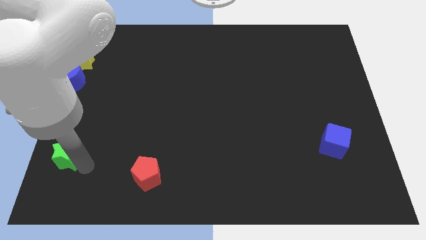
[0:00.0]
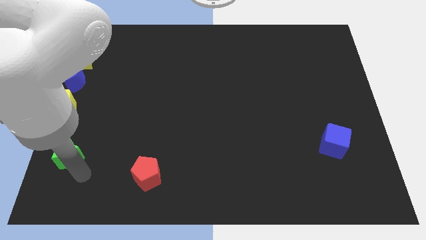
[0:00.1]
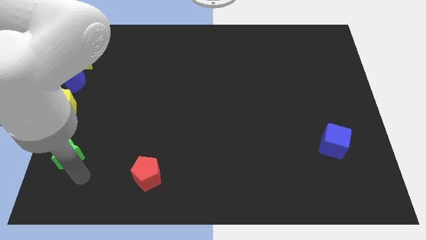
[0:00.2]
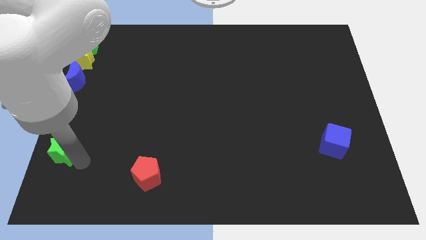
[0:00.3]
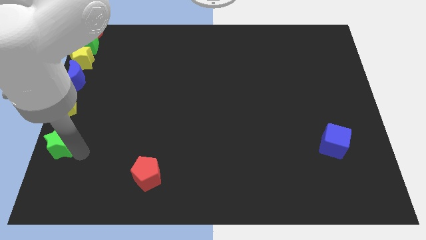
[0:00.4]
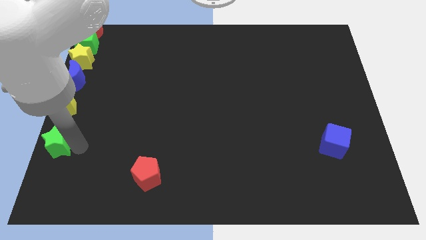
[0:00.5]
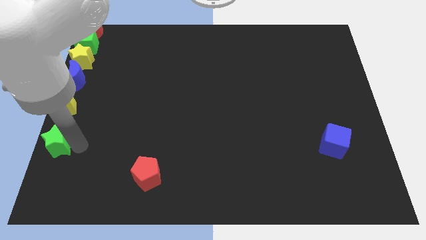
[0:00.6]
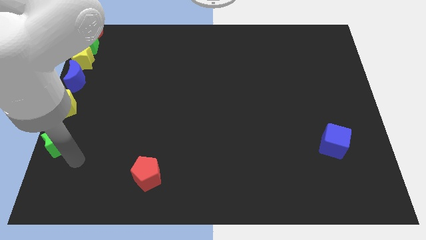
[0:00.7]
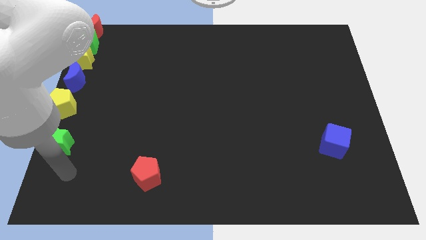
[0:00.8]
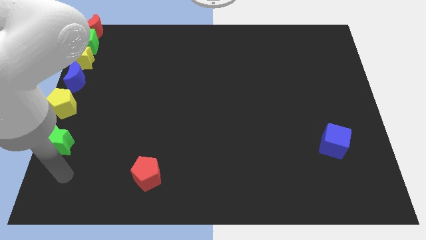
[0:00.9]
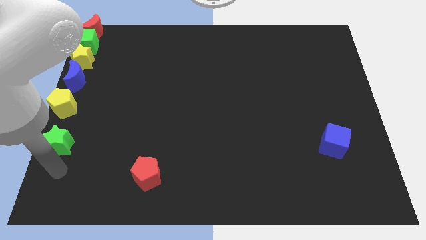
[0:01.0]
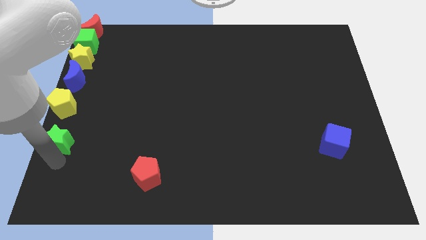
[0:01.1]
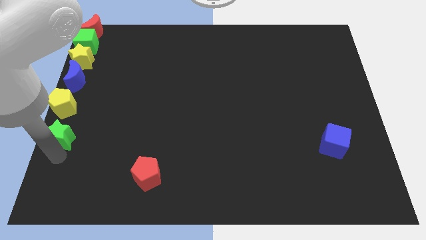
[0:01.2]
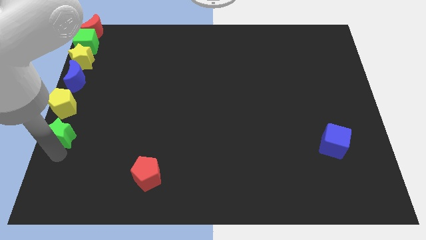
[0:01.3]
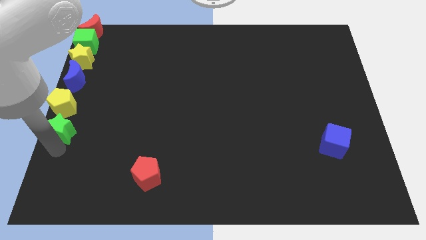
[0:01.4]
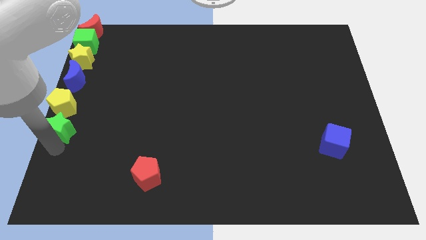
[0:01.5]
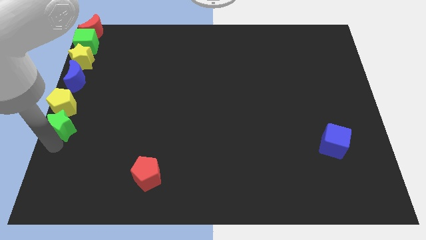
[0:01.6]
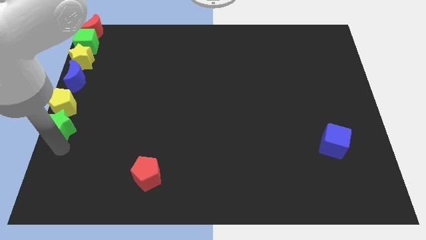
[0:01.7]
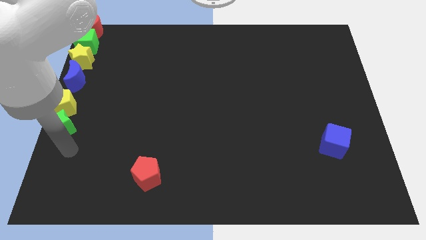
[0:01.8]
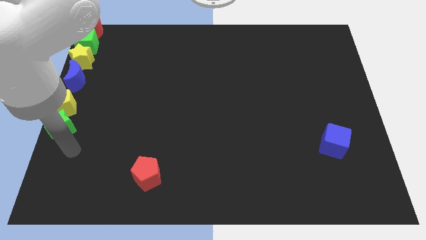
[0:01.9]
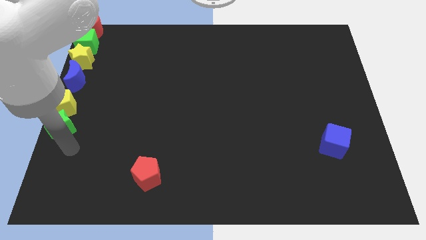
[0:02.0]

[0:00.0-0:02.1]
adjust the green star at the bottom of the yellow pentagon

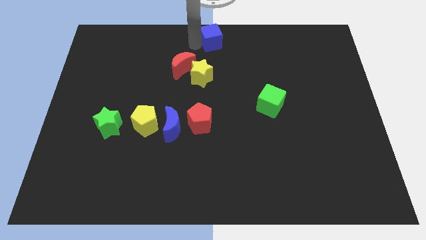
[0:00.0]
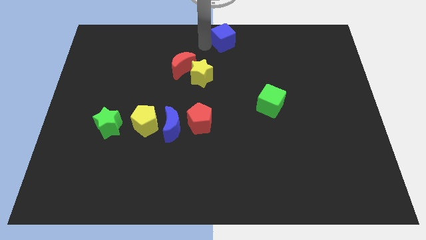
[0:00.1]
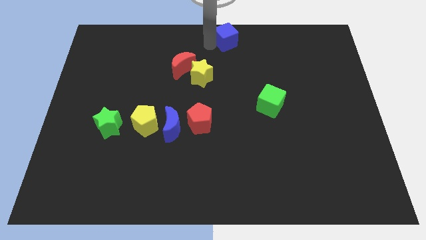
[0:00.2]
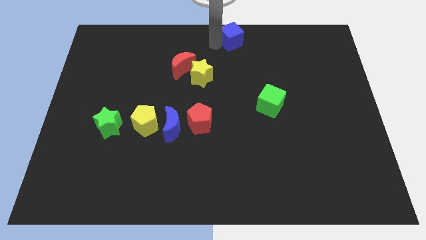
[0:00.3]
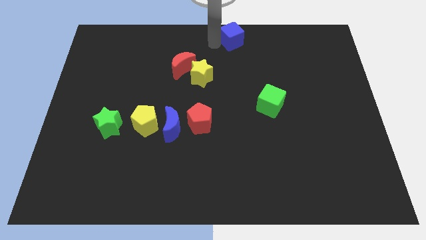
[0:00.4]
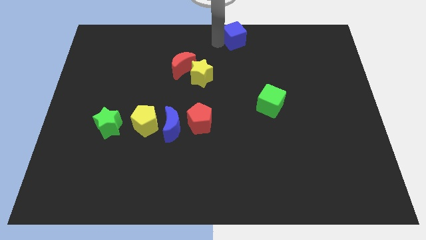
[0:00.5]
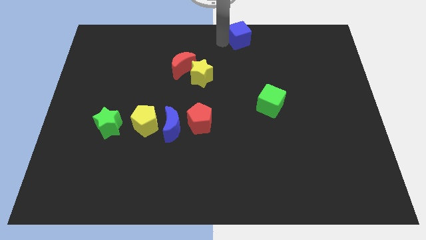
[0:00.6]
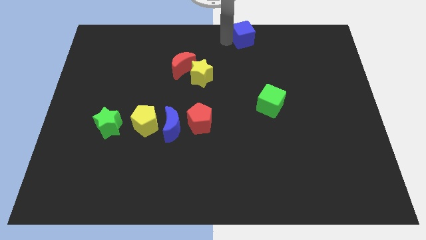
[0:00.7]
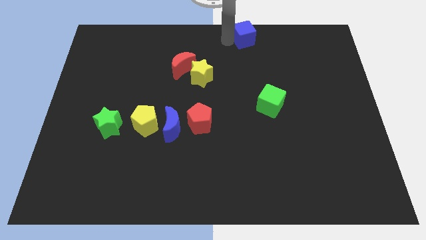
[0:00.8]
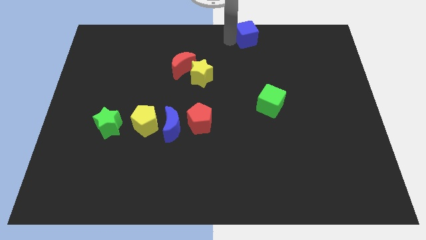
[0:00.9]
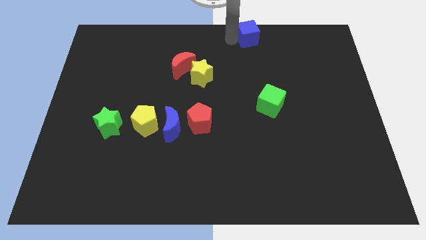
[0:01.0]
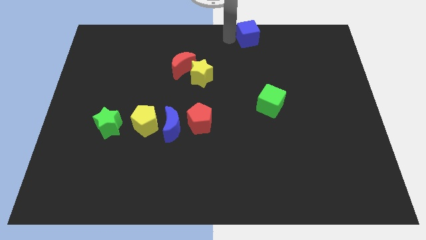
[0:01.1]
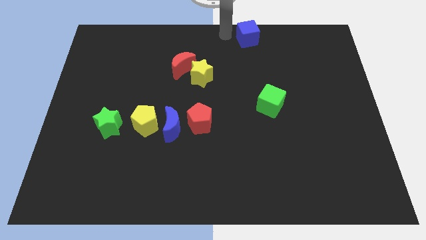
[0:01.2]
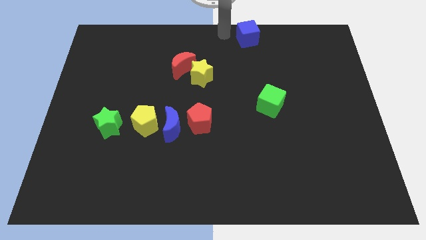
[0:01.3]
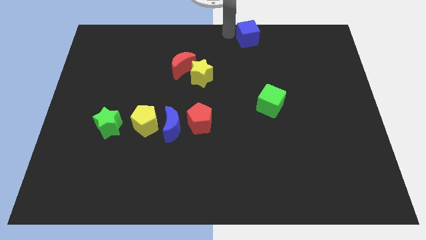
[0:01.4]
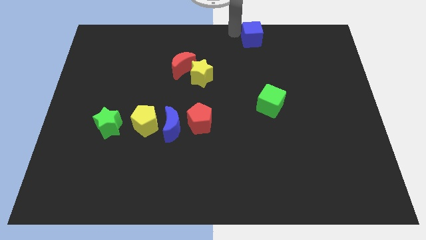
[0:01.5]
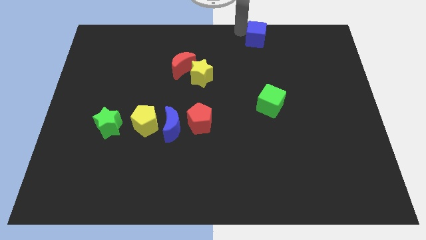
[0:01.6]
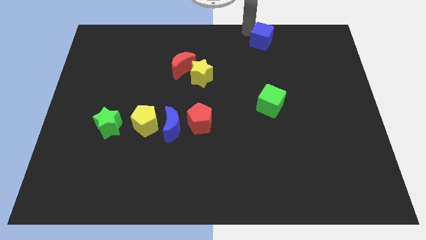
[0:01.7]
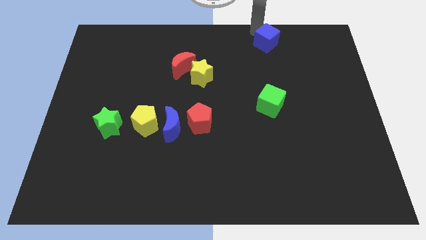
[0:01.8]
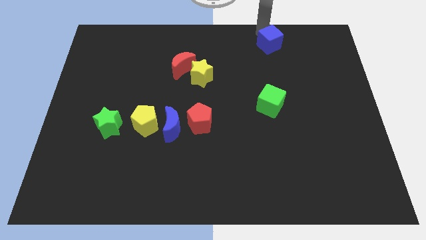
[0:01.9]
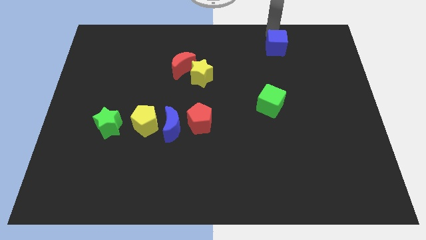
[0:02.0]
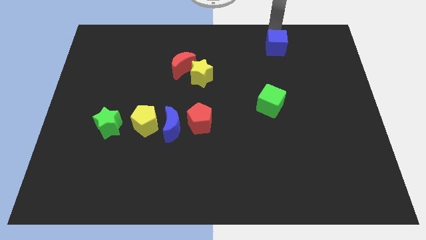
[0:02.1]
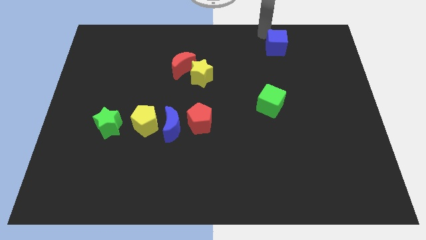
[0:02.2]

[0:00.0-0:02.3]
push the blue cube towards the right side of the board

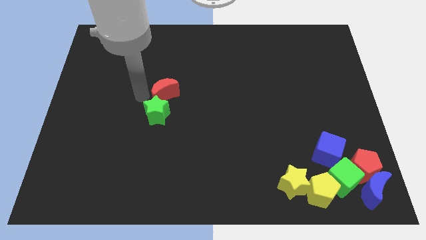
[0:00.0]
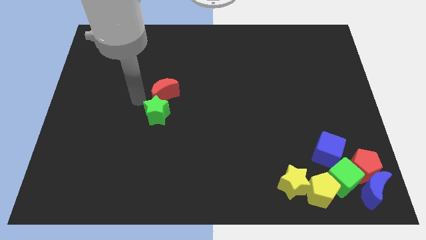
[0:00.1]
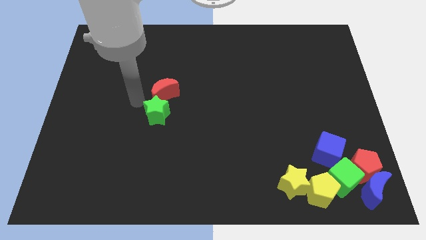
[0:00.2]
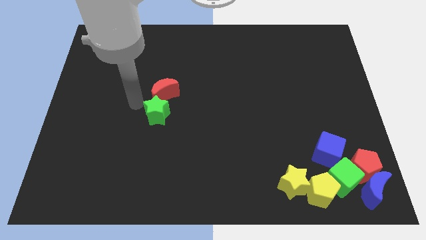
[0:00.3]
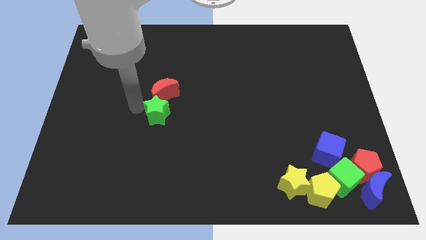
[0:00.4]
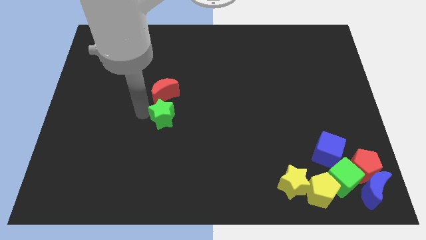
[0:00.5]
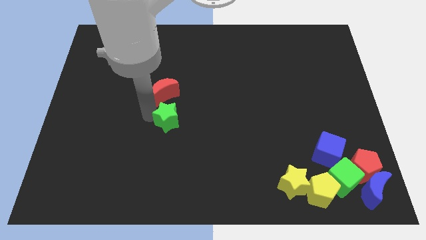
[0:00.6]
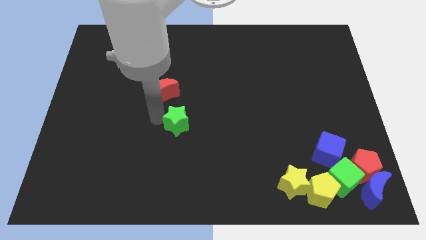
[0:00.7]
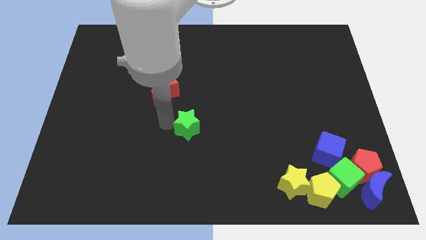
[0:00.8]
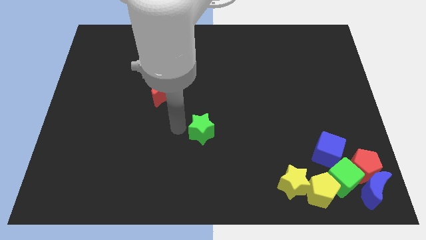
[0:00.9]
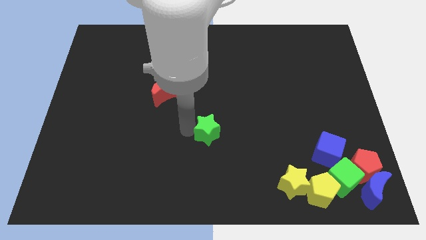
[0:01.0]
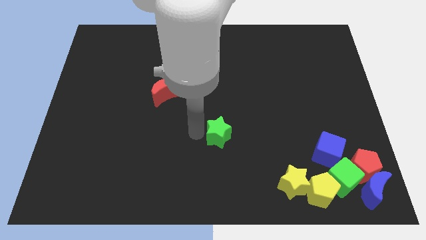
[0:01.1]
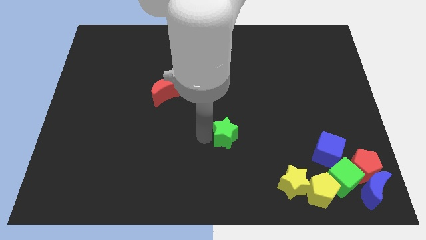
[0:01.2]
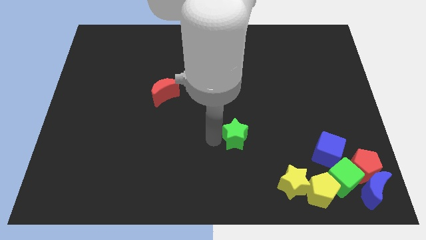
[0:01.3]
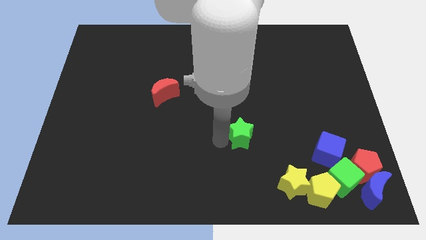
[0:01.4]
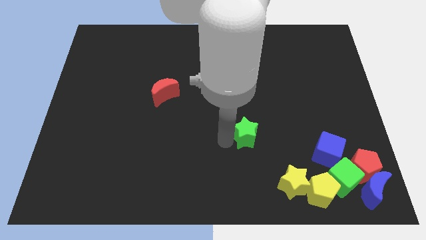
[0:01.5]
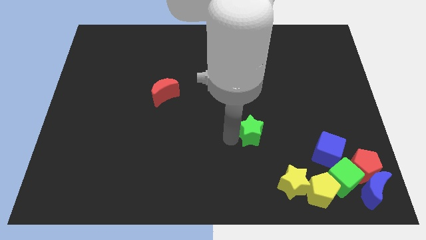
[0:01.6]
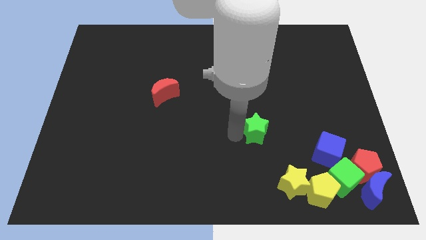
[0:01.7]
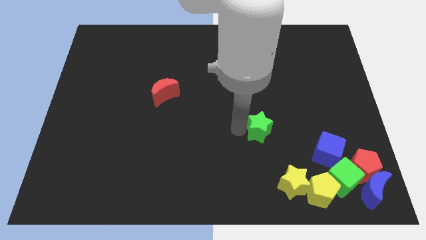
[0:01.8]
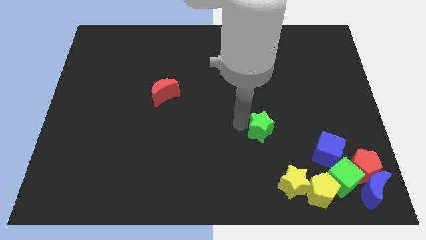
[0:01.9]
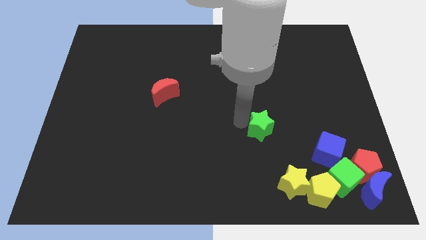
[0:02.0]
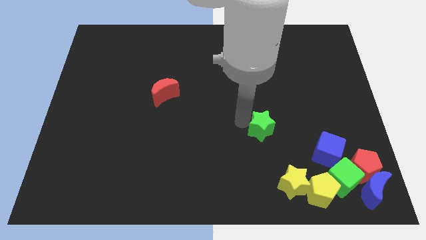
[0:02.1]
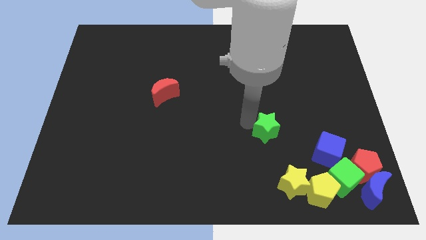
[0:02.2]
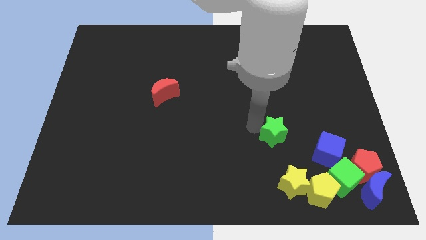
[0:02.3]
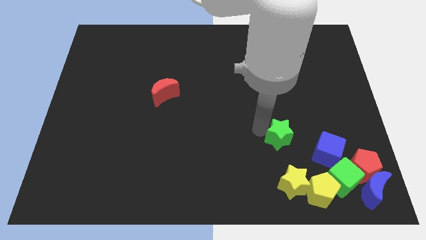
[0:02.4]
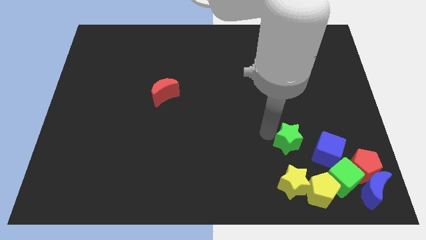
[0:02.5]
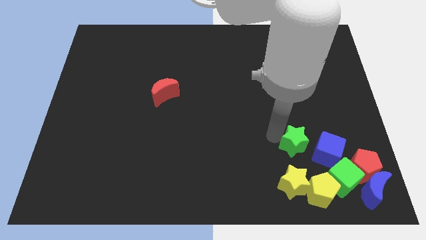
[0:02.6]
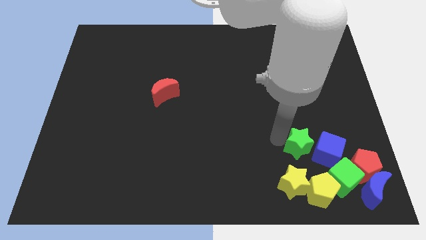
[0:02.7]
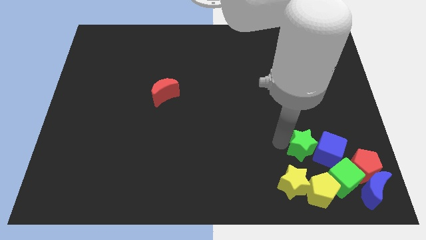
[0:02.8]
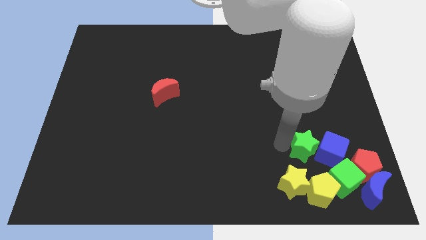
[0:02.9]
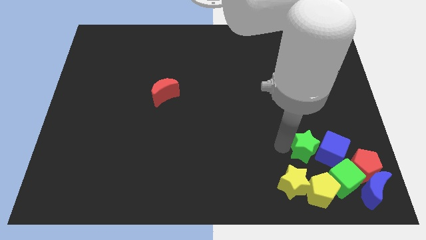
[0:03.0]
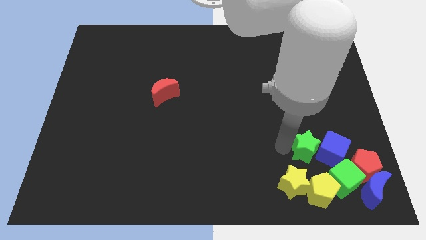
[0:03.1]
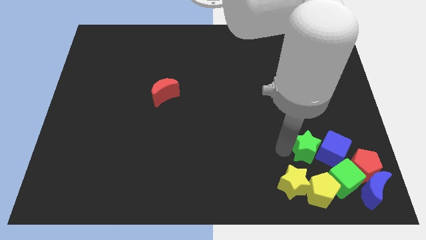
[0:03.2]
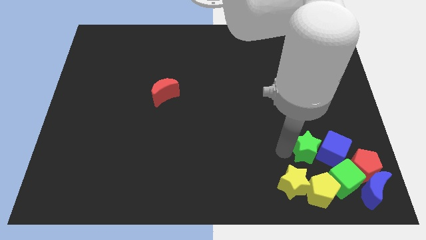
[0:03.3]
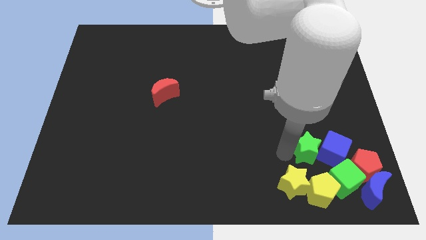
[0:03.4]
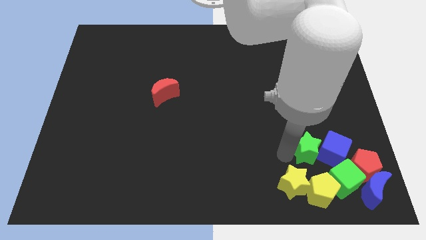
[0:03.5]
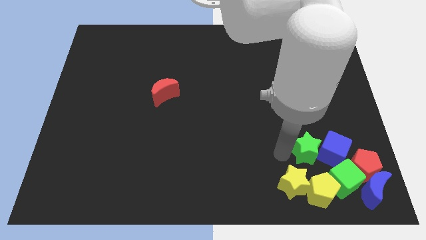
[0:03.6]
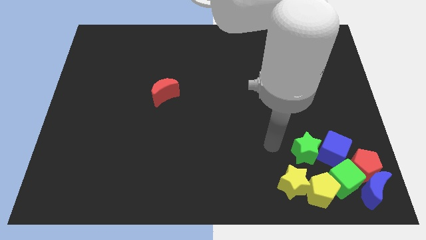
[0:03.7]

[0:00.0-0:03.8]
move green star to the left of blue cube

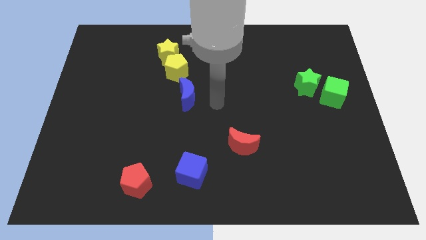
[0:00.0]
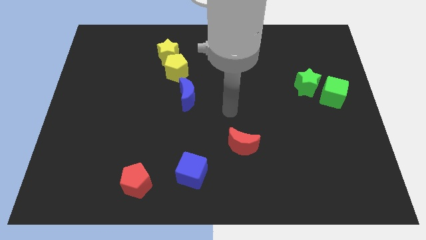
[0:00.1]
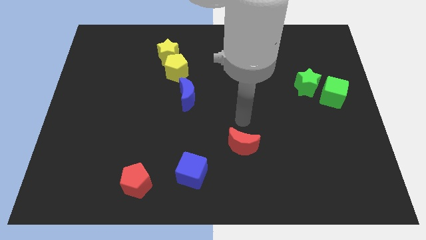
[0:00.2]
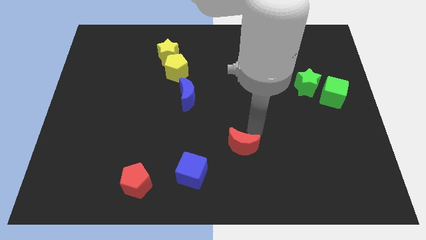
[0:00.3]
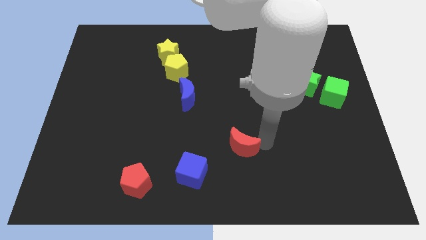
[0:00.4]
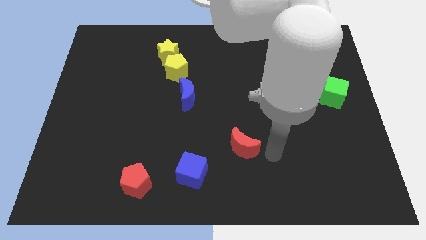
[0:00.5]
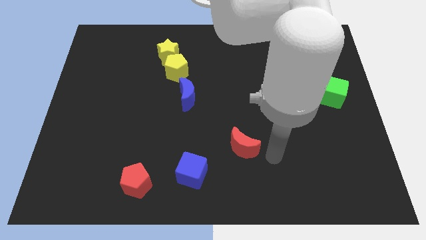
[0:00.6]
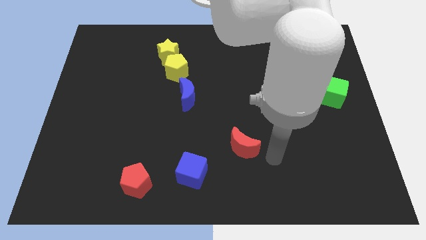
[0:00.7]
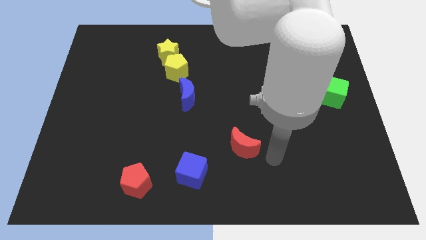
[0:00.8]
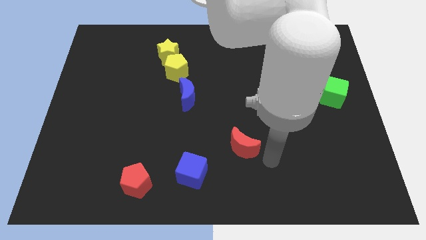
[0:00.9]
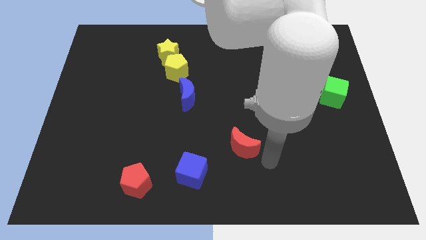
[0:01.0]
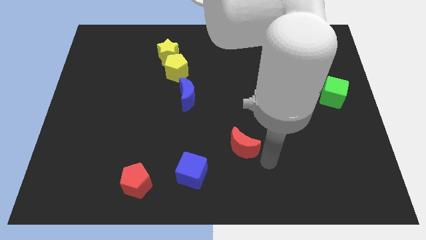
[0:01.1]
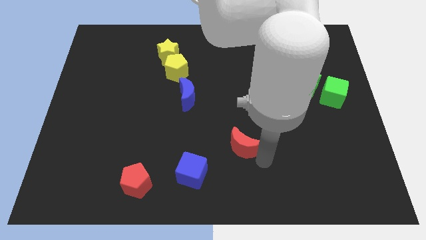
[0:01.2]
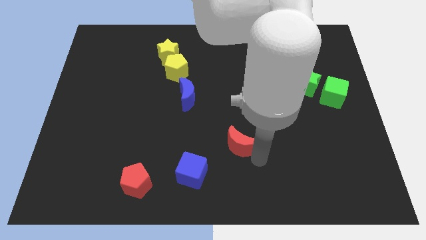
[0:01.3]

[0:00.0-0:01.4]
touch the red moon
